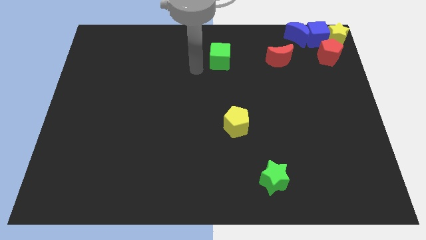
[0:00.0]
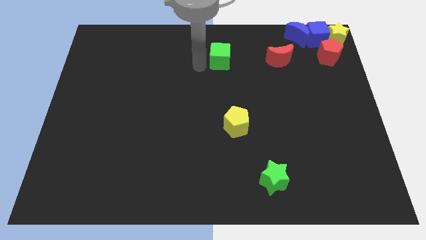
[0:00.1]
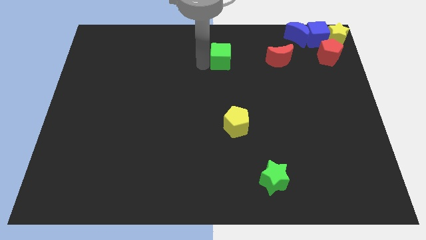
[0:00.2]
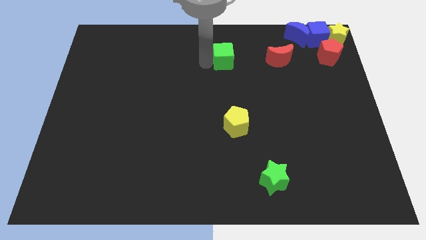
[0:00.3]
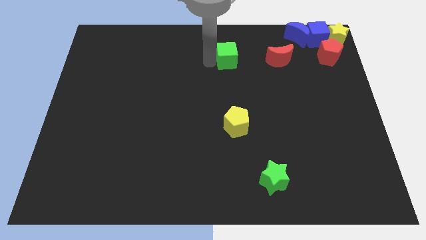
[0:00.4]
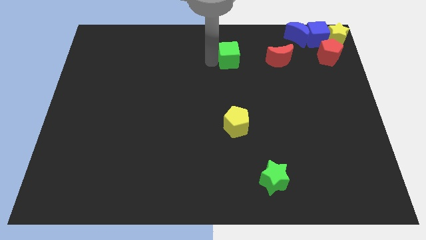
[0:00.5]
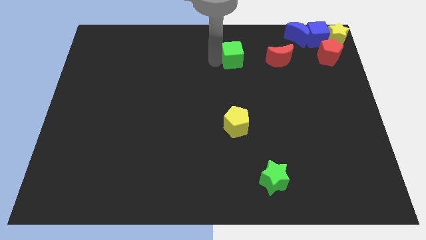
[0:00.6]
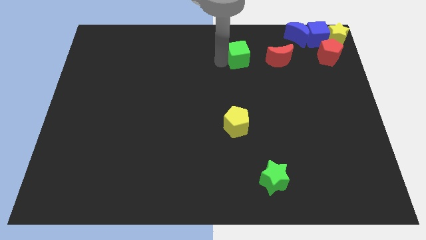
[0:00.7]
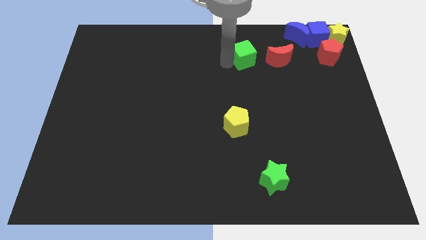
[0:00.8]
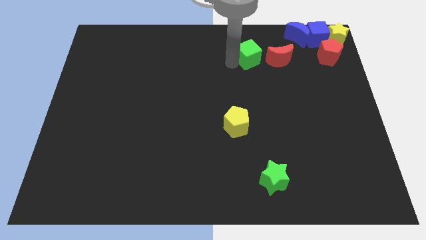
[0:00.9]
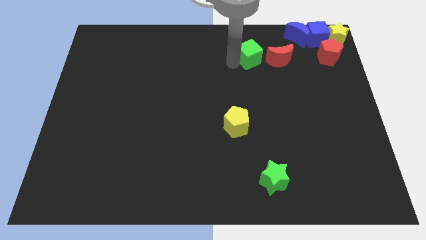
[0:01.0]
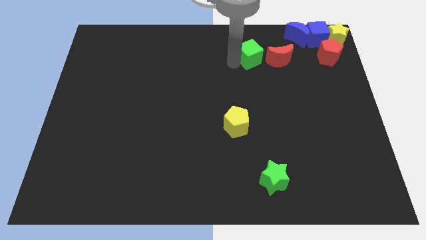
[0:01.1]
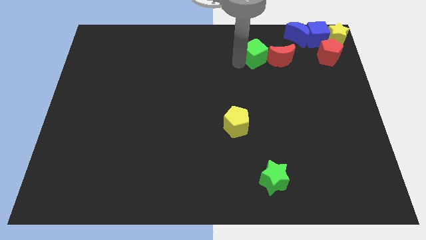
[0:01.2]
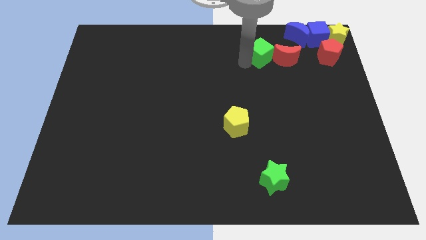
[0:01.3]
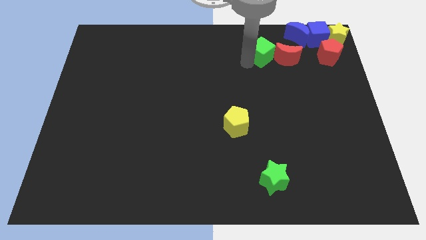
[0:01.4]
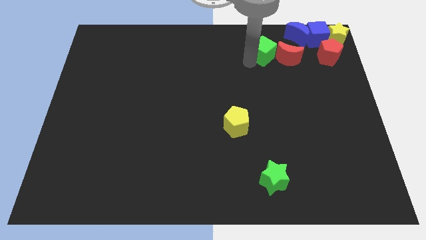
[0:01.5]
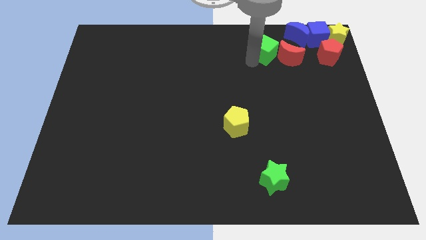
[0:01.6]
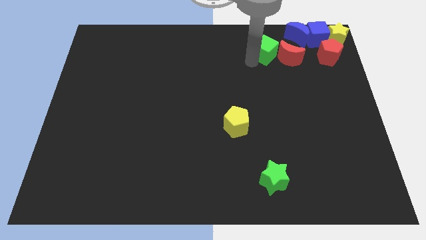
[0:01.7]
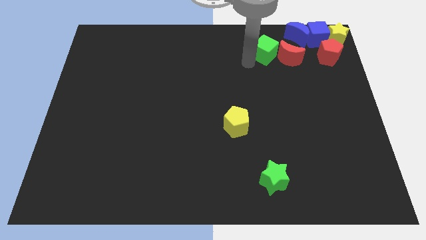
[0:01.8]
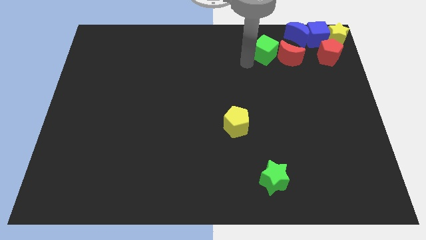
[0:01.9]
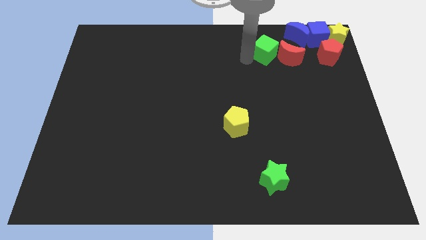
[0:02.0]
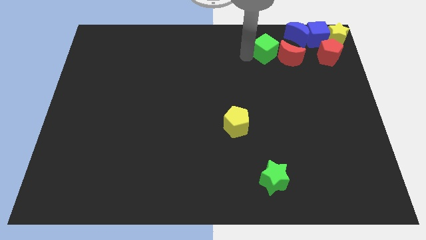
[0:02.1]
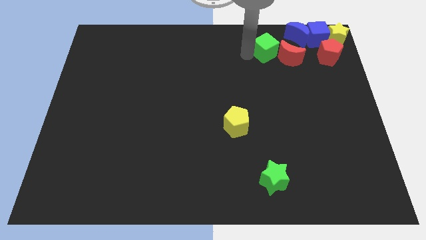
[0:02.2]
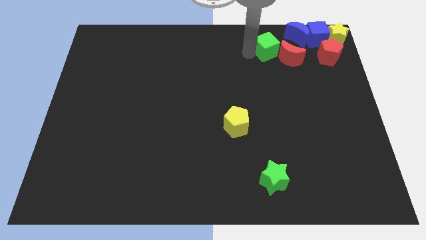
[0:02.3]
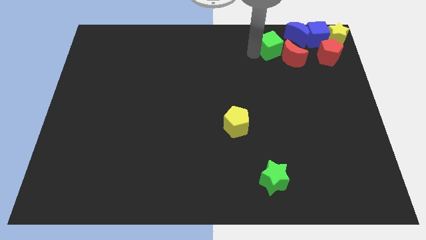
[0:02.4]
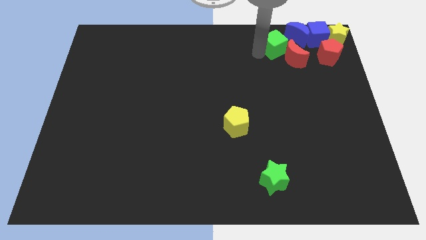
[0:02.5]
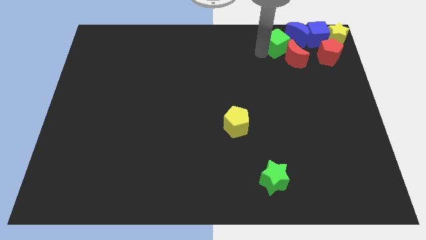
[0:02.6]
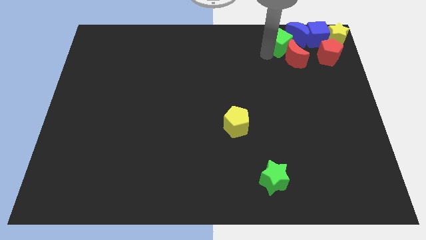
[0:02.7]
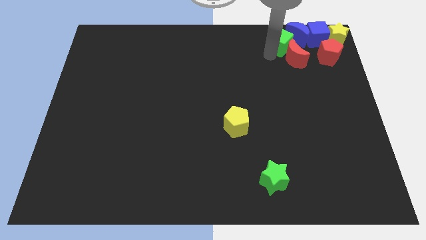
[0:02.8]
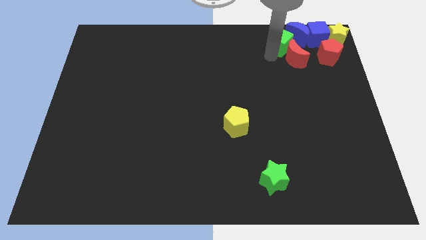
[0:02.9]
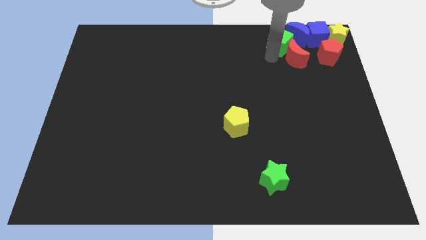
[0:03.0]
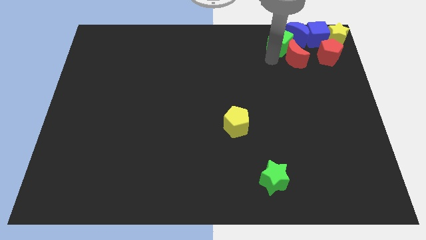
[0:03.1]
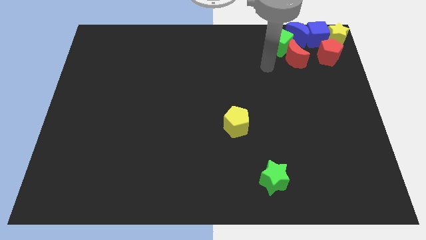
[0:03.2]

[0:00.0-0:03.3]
move the green cube close to the blue crescent

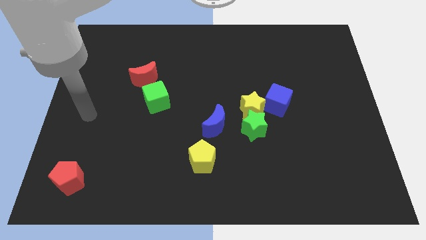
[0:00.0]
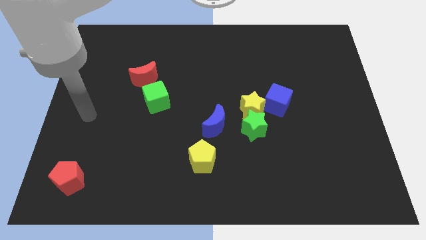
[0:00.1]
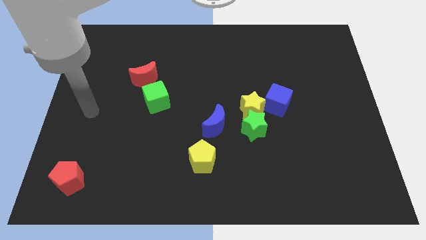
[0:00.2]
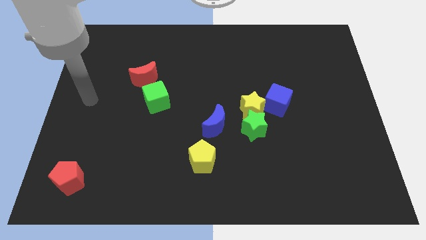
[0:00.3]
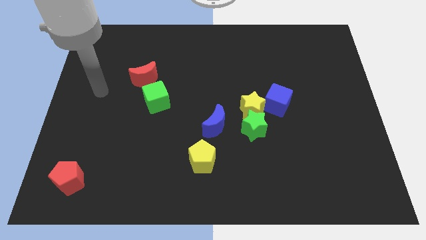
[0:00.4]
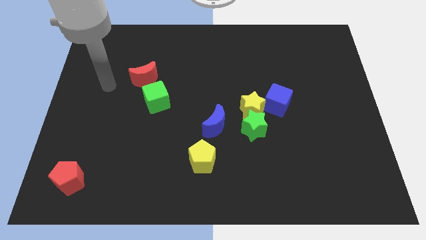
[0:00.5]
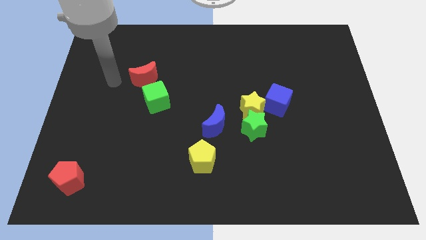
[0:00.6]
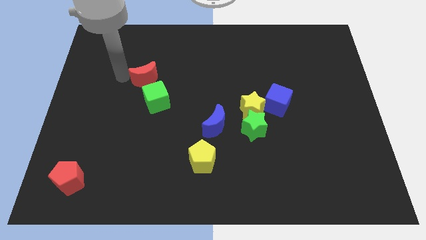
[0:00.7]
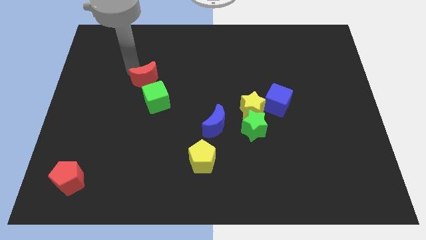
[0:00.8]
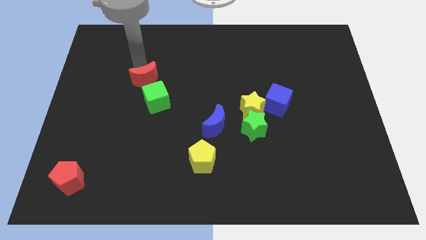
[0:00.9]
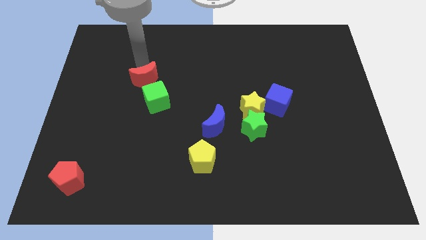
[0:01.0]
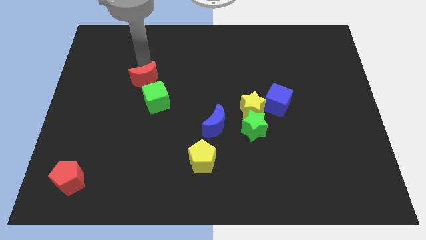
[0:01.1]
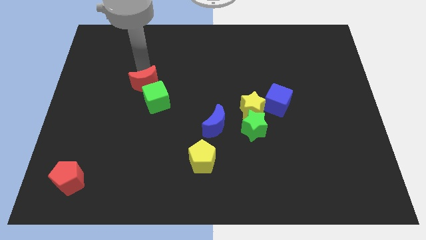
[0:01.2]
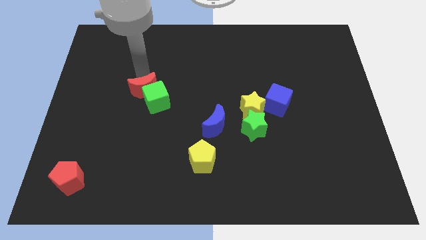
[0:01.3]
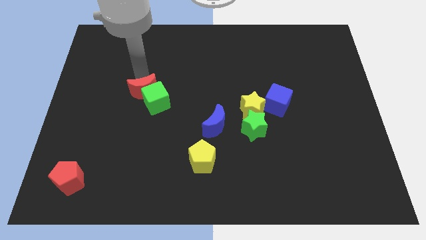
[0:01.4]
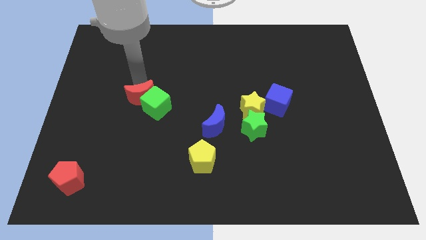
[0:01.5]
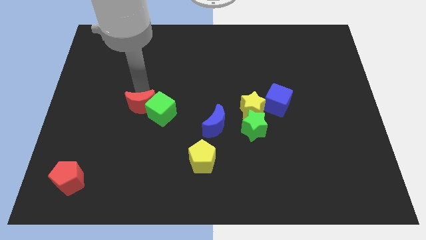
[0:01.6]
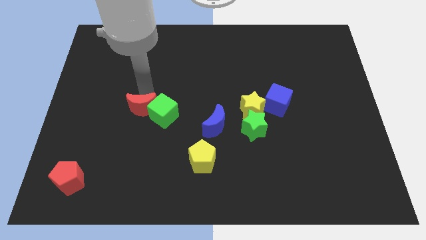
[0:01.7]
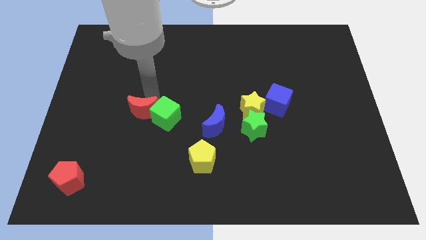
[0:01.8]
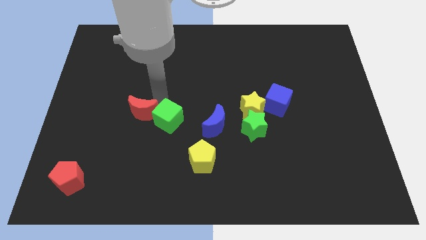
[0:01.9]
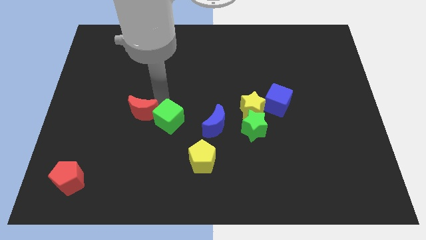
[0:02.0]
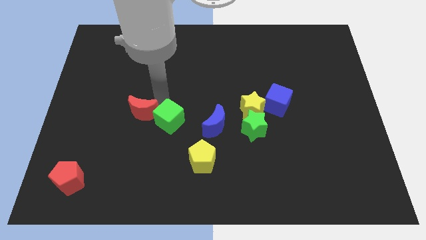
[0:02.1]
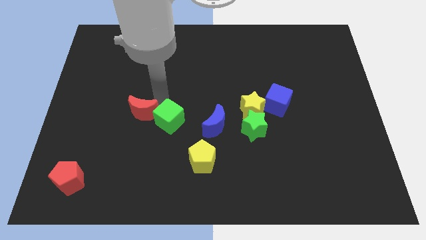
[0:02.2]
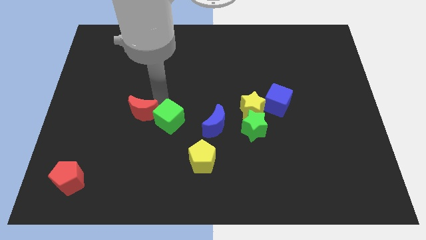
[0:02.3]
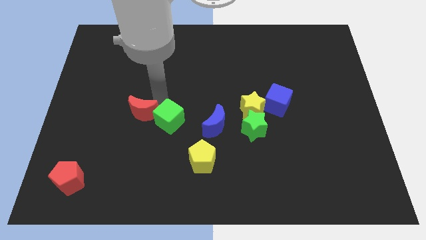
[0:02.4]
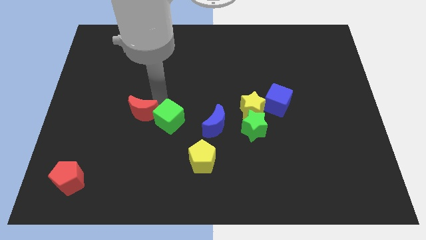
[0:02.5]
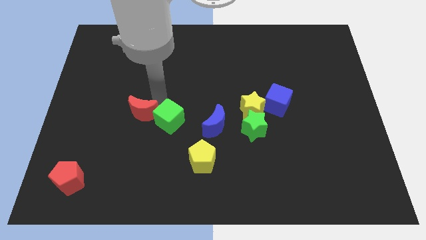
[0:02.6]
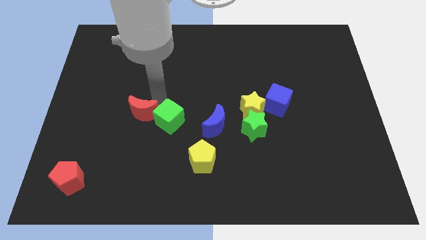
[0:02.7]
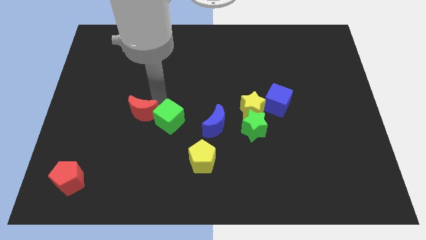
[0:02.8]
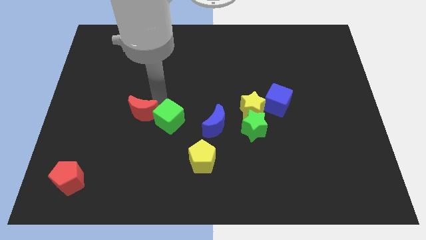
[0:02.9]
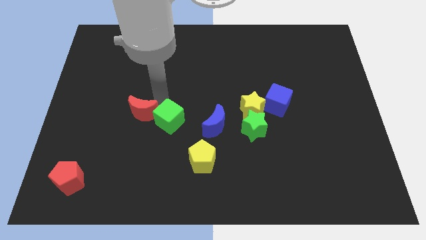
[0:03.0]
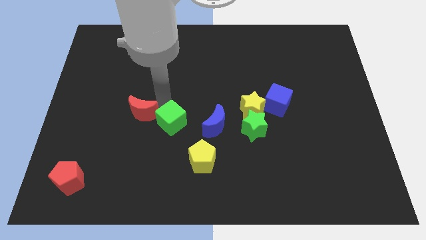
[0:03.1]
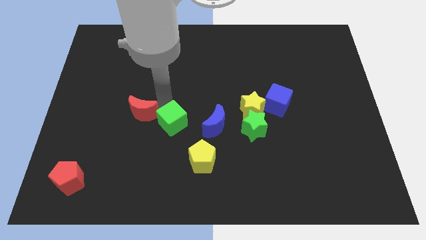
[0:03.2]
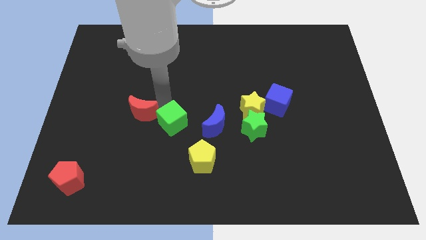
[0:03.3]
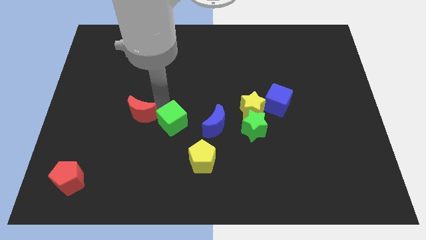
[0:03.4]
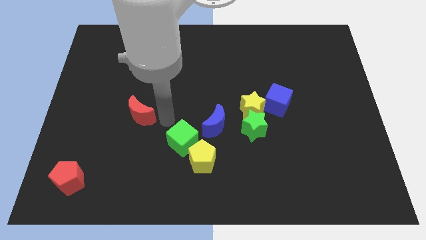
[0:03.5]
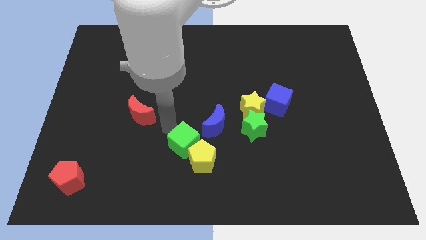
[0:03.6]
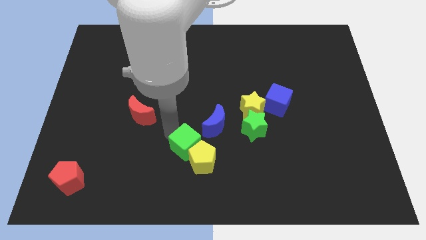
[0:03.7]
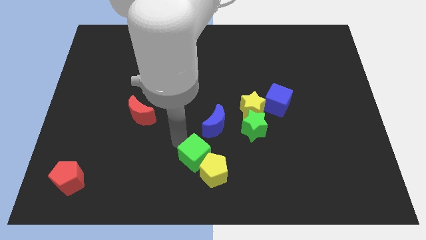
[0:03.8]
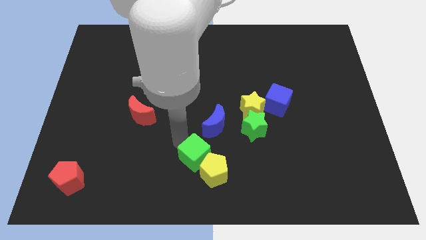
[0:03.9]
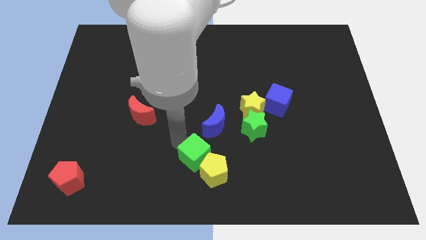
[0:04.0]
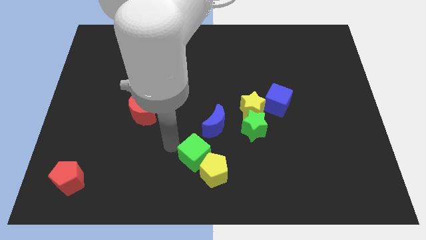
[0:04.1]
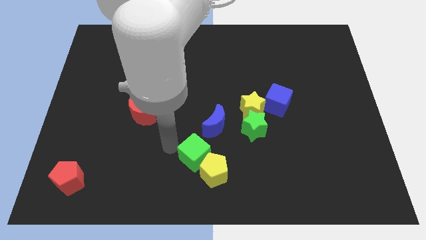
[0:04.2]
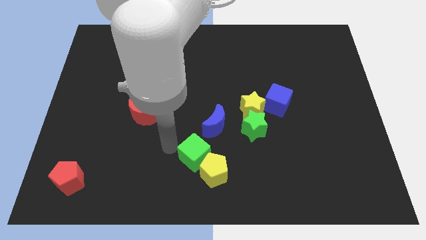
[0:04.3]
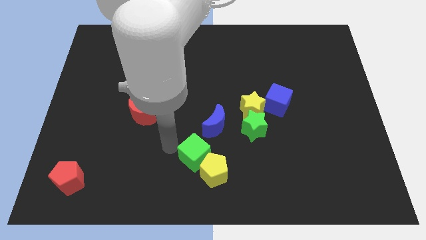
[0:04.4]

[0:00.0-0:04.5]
separate the red moon and green cube

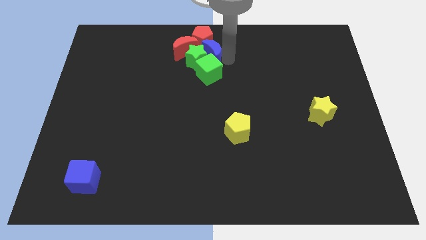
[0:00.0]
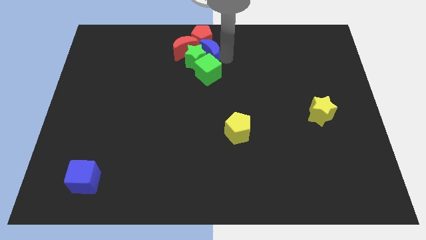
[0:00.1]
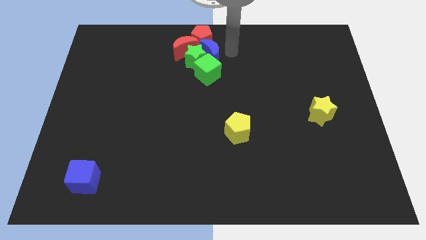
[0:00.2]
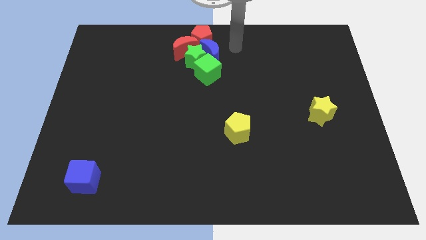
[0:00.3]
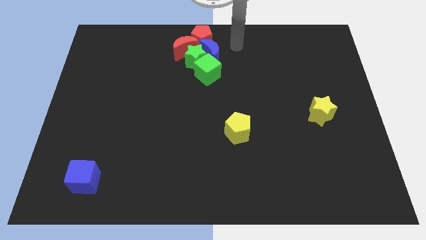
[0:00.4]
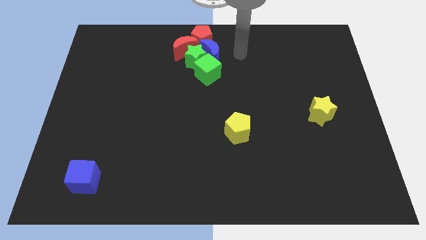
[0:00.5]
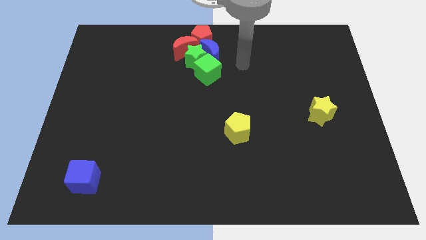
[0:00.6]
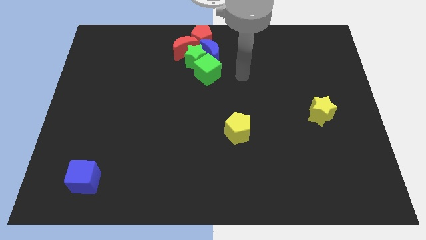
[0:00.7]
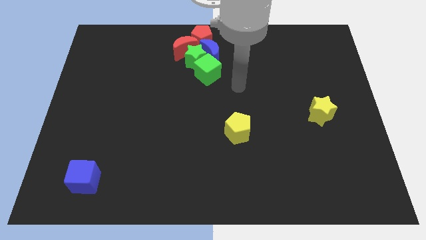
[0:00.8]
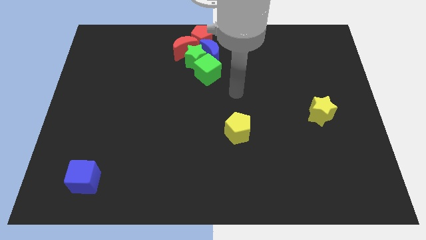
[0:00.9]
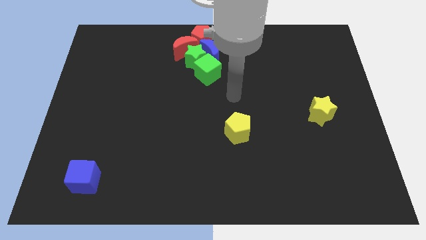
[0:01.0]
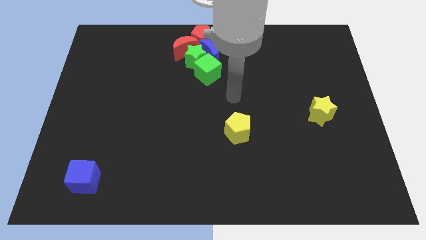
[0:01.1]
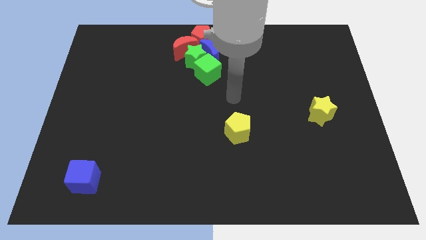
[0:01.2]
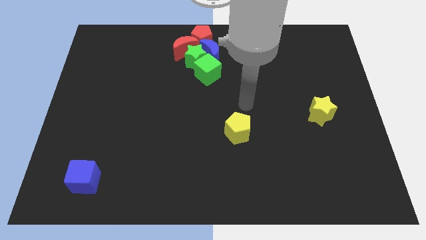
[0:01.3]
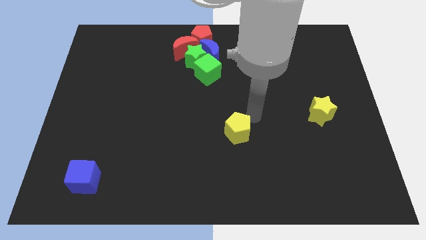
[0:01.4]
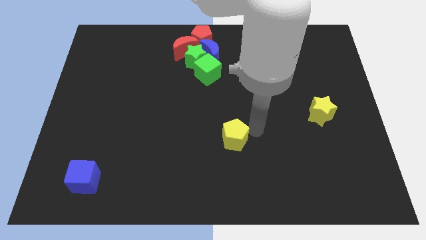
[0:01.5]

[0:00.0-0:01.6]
touch the right top of the yellow pentagon
